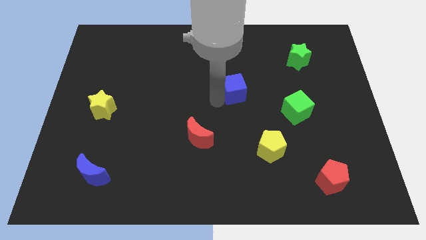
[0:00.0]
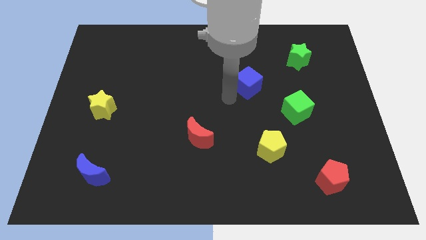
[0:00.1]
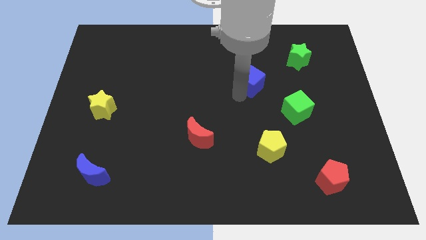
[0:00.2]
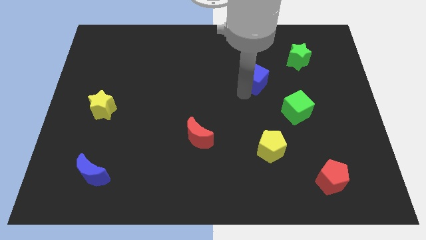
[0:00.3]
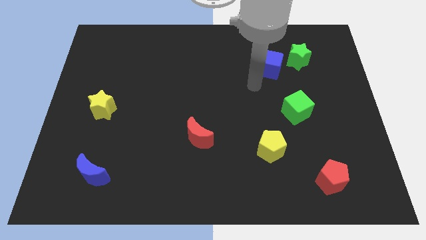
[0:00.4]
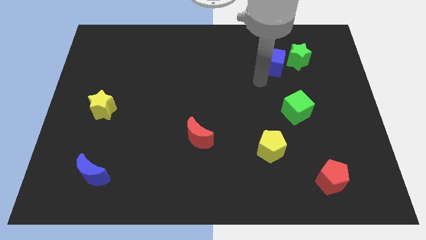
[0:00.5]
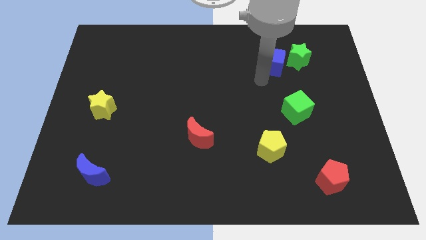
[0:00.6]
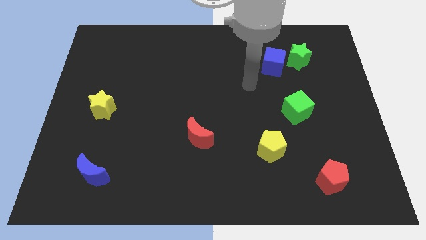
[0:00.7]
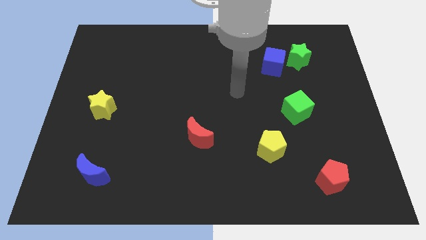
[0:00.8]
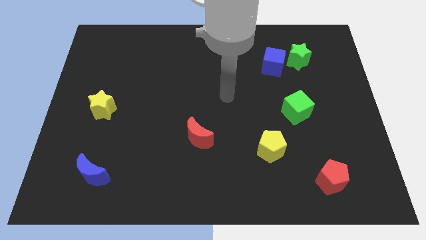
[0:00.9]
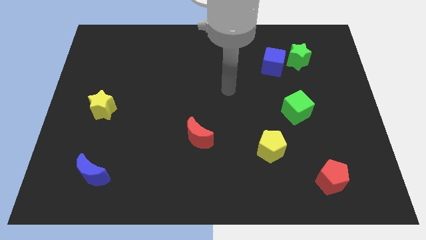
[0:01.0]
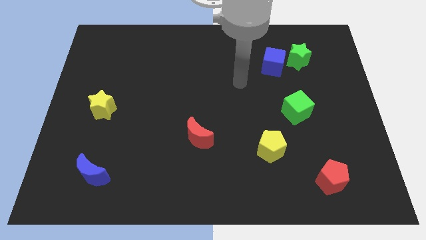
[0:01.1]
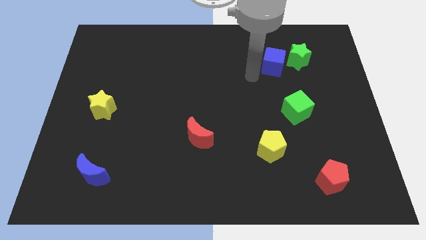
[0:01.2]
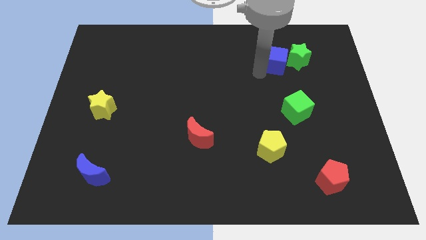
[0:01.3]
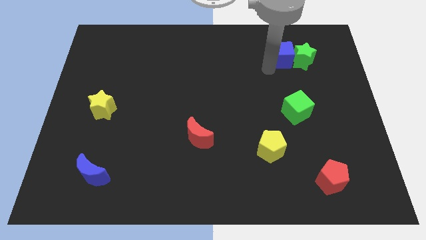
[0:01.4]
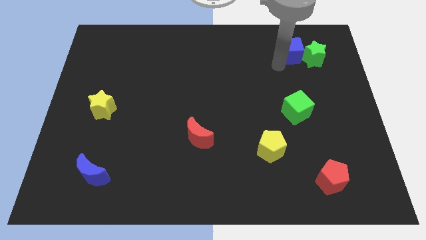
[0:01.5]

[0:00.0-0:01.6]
move the blue cube to the left of the green star

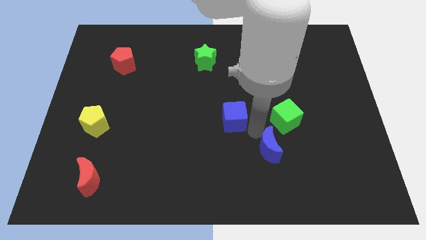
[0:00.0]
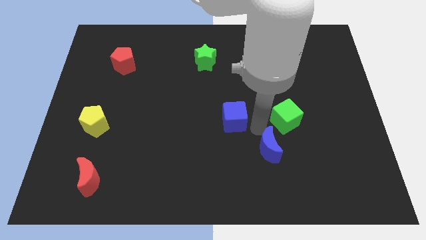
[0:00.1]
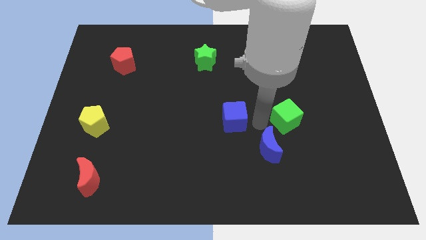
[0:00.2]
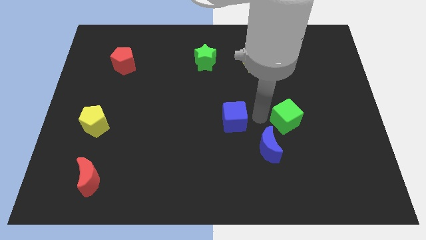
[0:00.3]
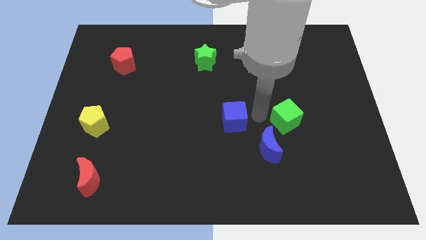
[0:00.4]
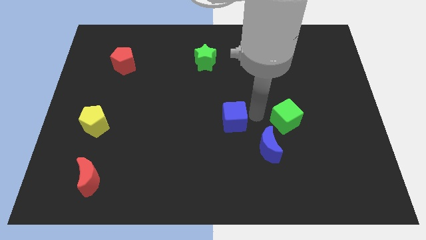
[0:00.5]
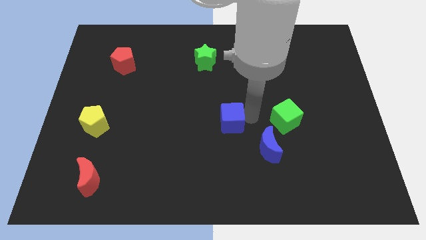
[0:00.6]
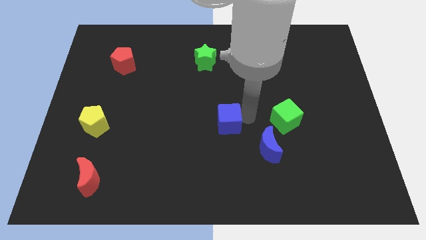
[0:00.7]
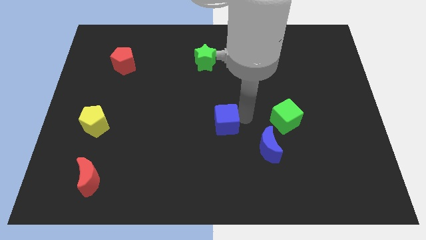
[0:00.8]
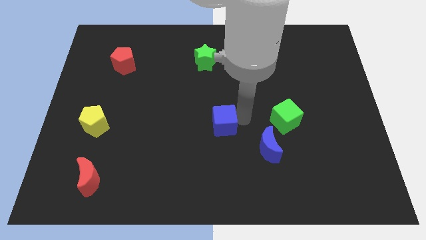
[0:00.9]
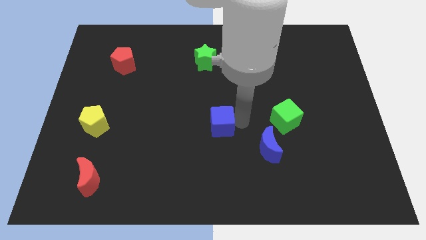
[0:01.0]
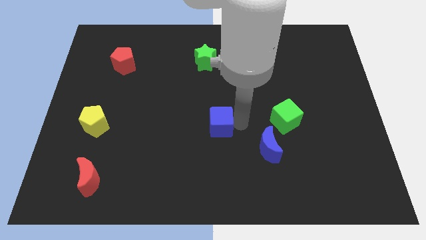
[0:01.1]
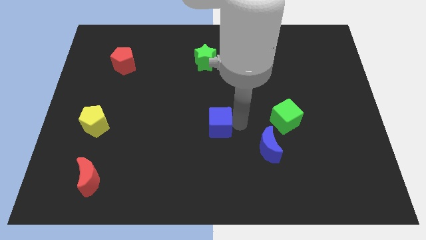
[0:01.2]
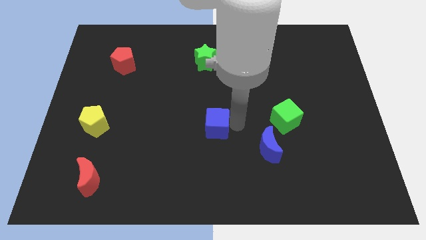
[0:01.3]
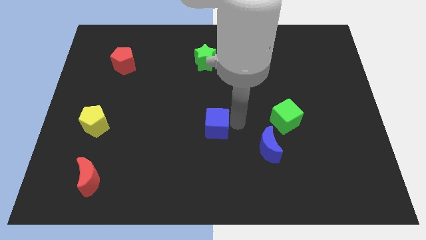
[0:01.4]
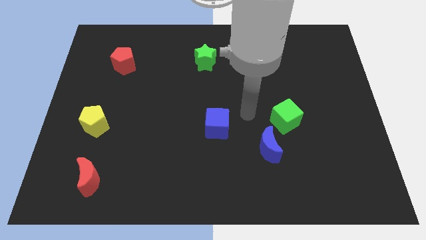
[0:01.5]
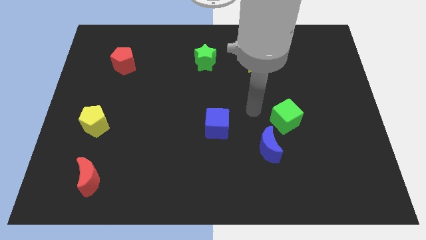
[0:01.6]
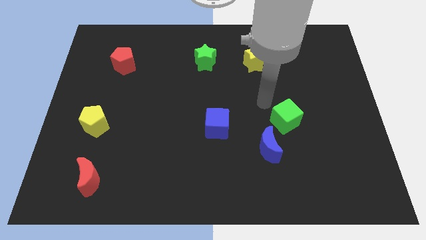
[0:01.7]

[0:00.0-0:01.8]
push the blue cube to the left of the board

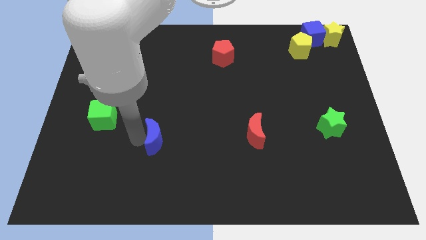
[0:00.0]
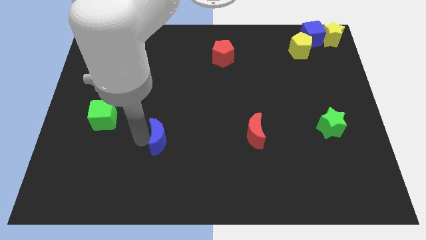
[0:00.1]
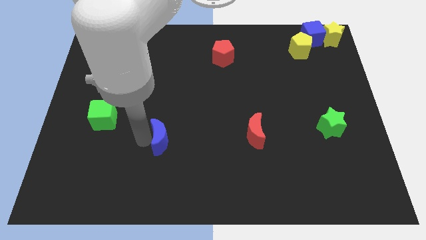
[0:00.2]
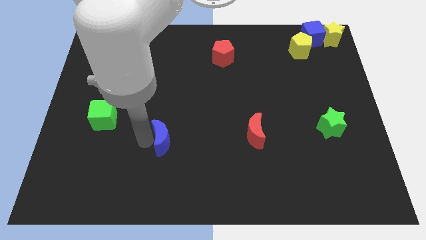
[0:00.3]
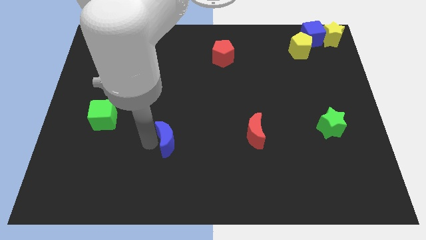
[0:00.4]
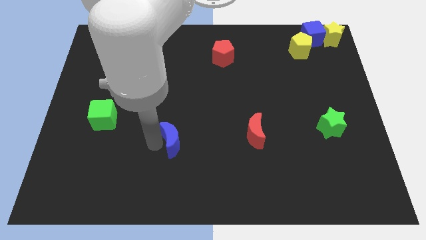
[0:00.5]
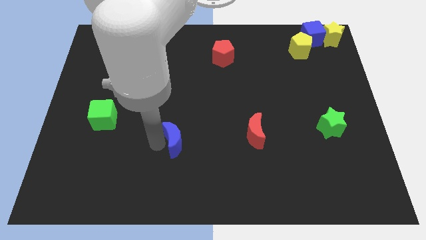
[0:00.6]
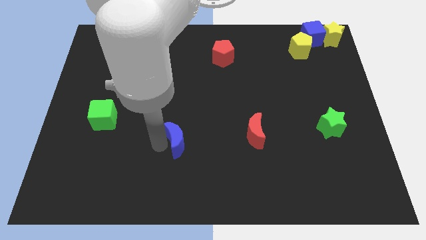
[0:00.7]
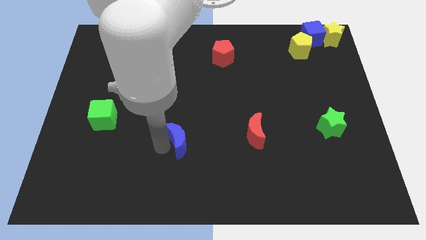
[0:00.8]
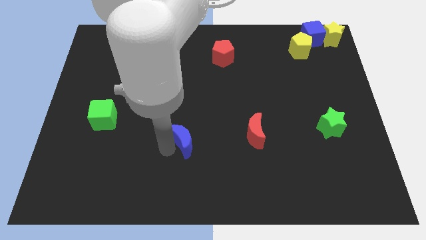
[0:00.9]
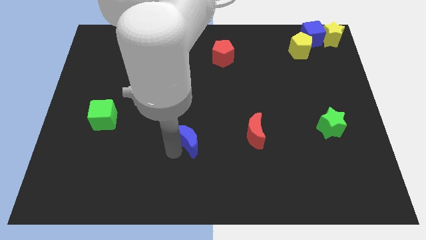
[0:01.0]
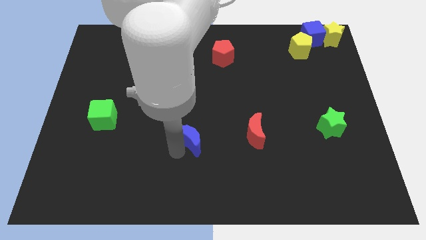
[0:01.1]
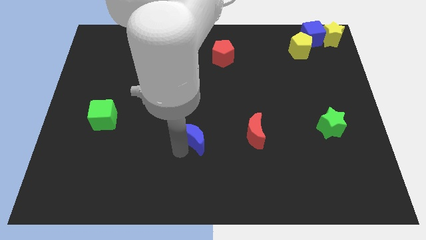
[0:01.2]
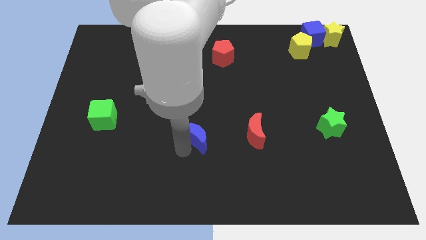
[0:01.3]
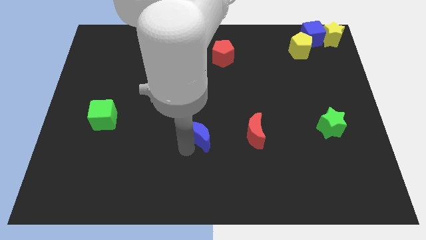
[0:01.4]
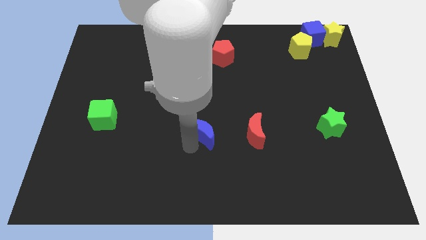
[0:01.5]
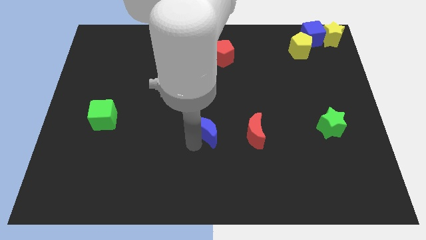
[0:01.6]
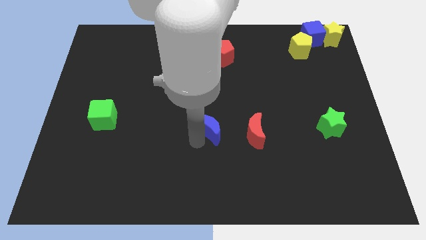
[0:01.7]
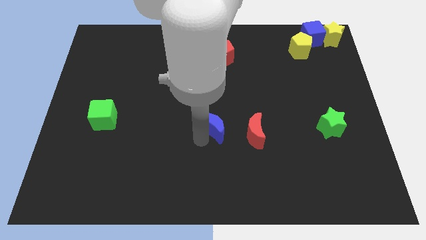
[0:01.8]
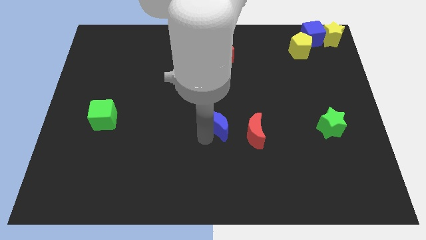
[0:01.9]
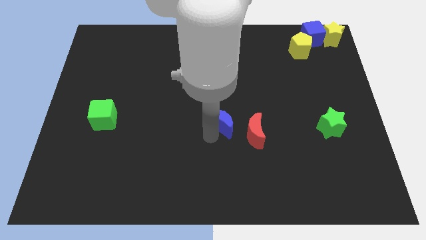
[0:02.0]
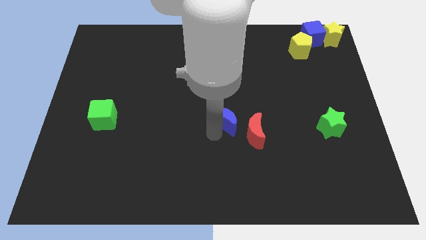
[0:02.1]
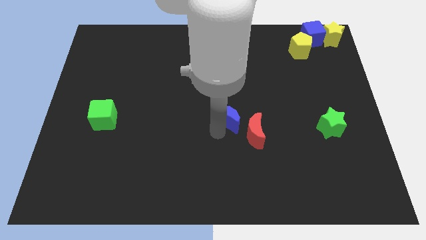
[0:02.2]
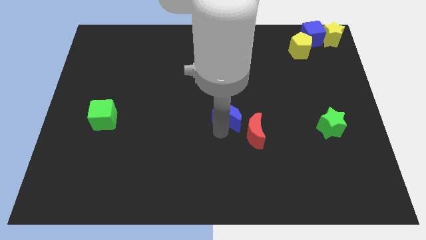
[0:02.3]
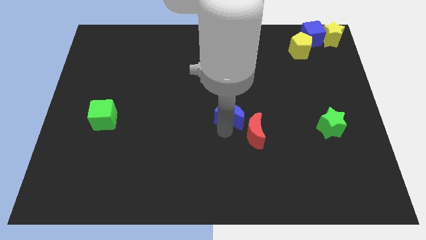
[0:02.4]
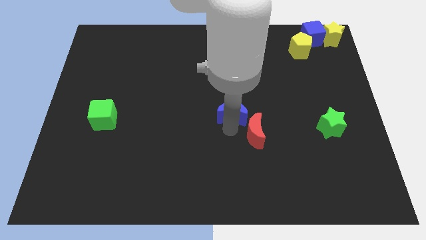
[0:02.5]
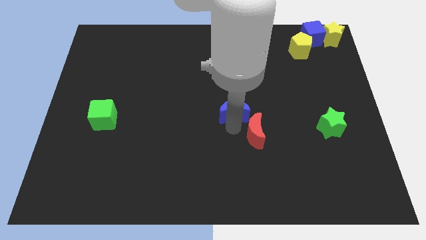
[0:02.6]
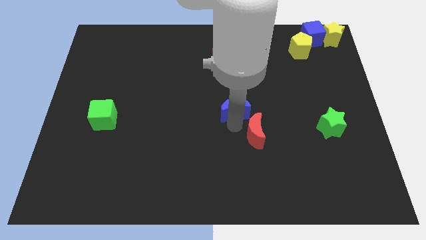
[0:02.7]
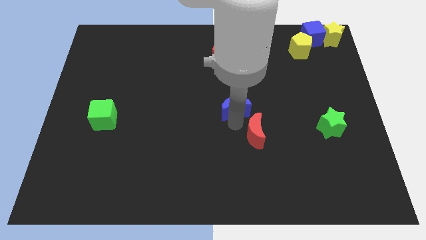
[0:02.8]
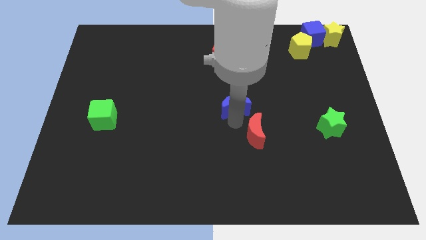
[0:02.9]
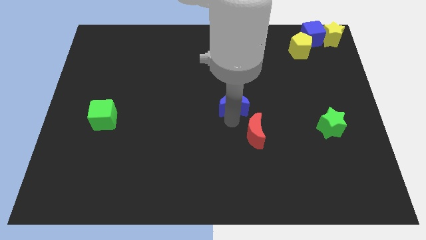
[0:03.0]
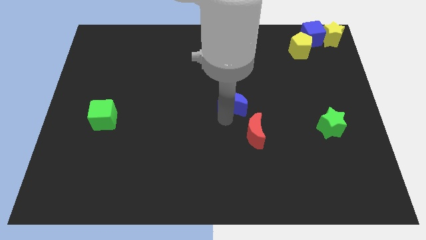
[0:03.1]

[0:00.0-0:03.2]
place the blue moon to center of the board

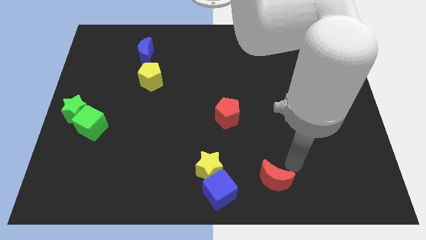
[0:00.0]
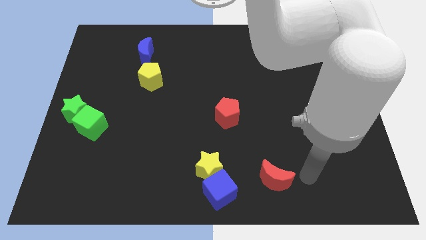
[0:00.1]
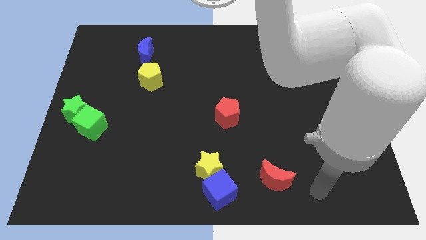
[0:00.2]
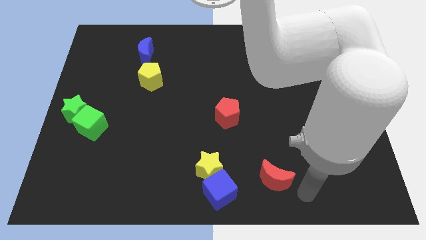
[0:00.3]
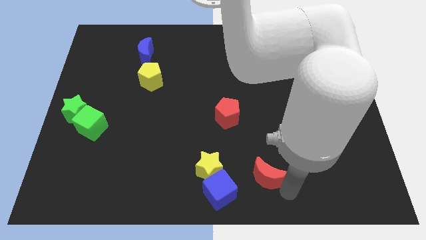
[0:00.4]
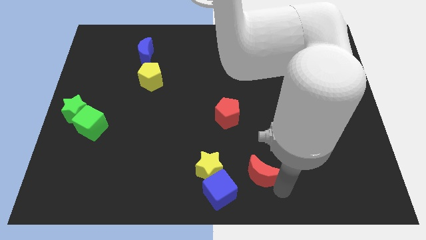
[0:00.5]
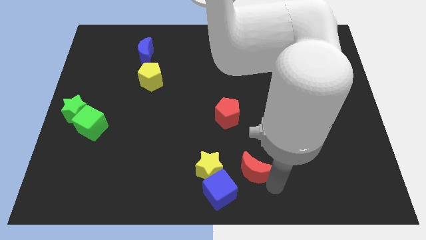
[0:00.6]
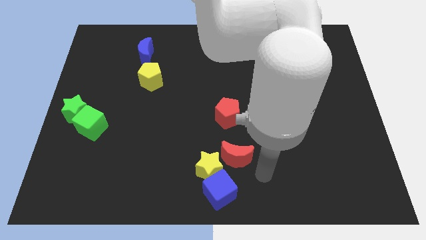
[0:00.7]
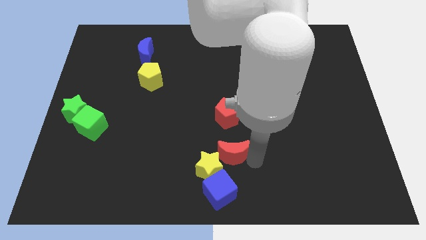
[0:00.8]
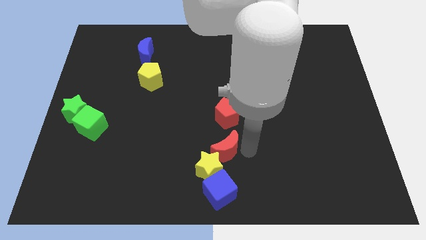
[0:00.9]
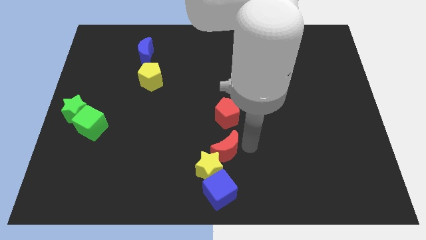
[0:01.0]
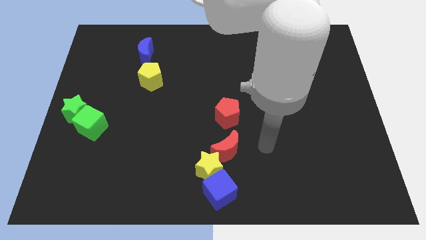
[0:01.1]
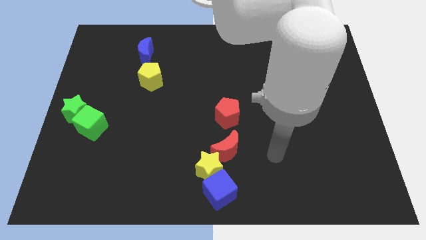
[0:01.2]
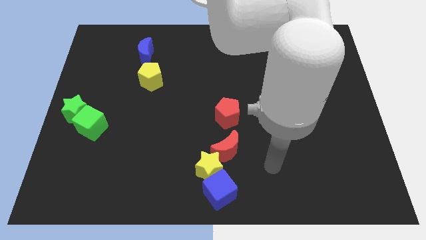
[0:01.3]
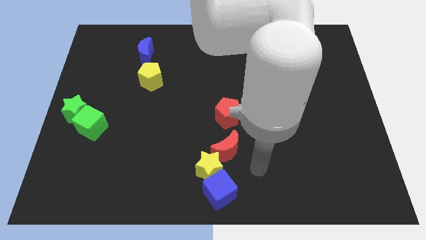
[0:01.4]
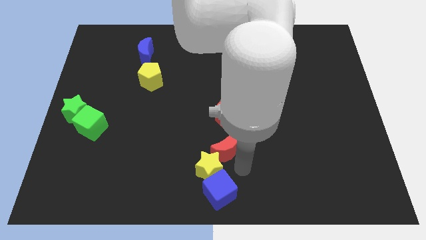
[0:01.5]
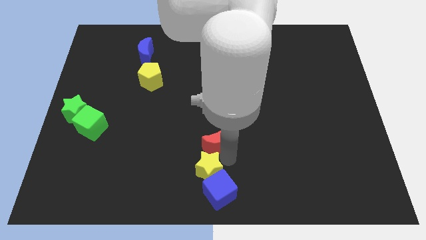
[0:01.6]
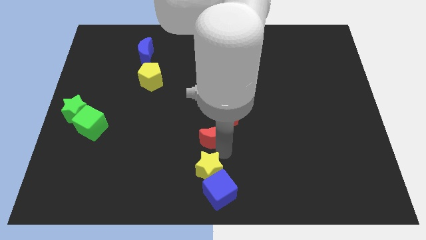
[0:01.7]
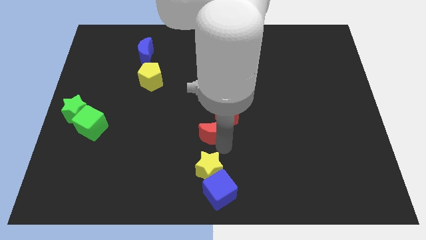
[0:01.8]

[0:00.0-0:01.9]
slide the red crescent close to the red pentagon

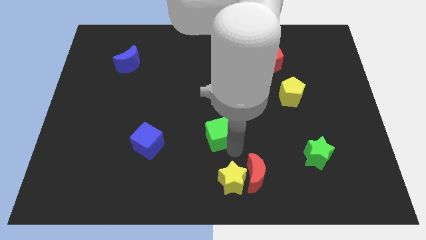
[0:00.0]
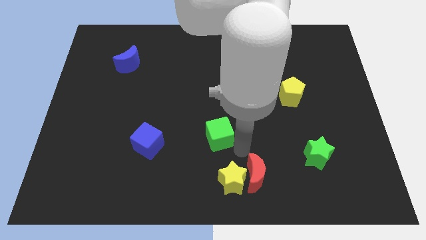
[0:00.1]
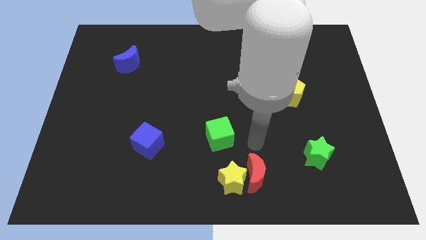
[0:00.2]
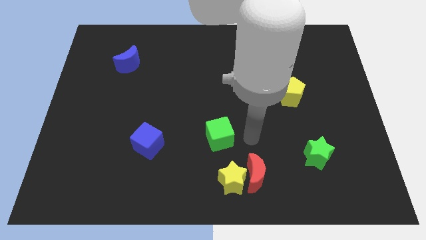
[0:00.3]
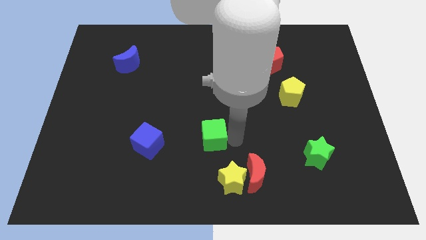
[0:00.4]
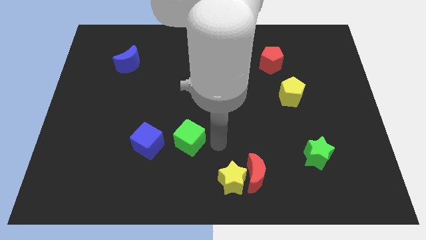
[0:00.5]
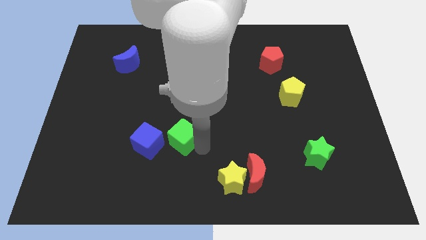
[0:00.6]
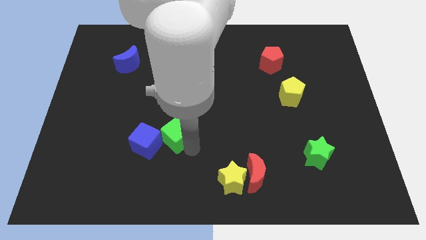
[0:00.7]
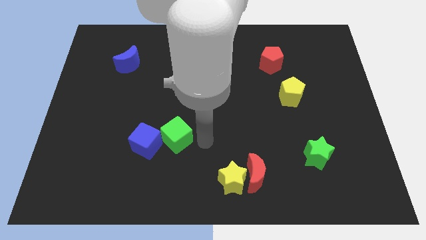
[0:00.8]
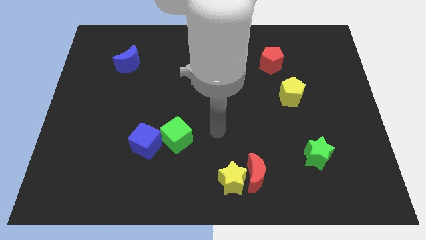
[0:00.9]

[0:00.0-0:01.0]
push green cube in to blue cube
